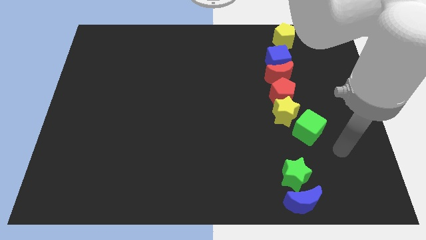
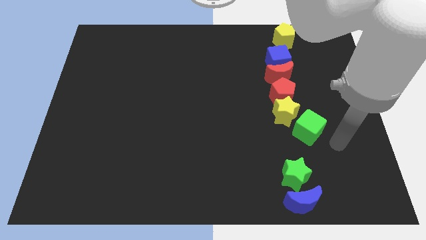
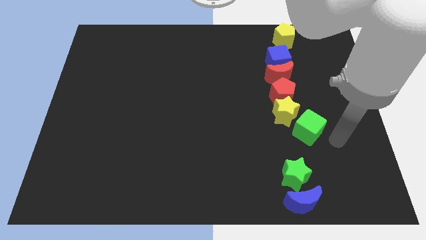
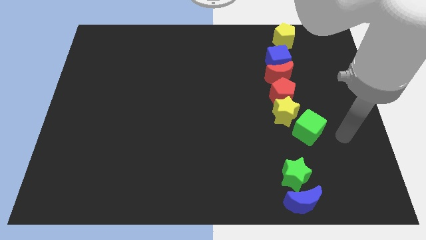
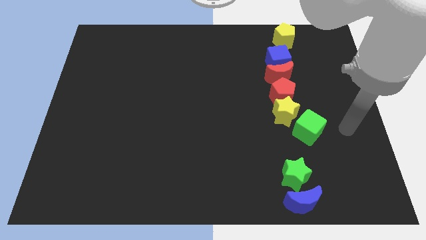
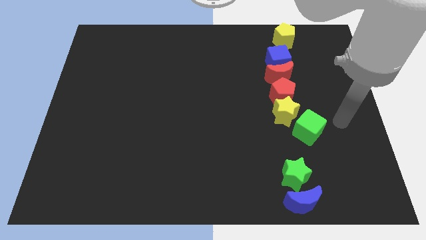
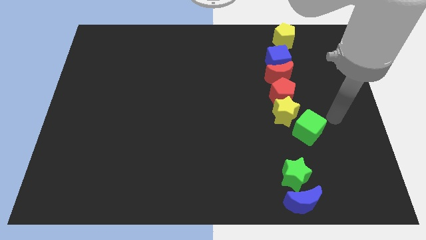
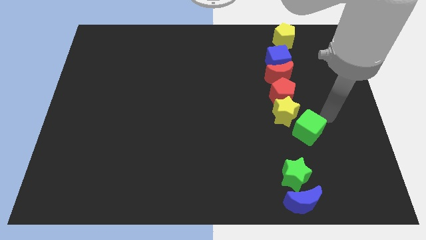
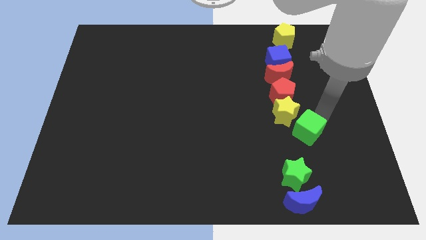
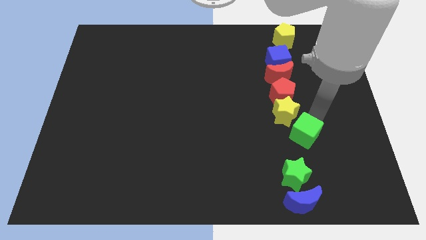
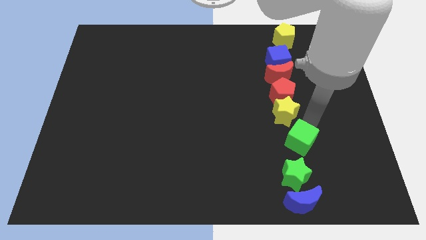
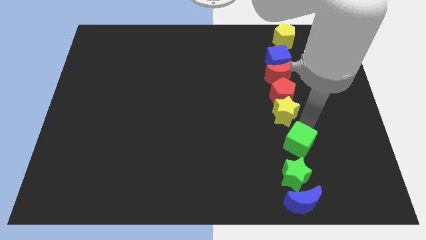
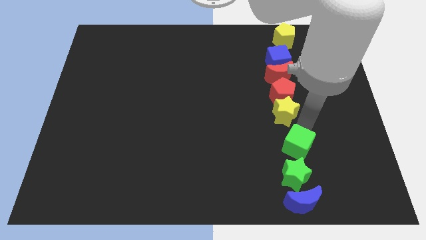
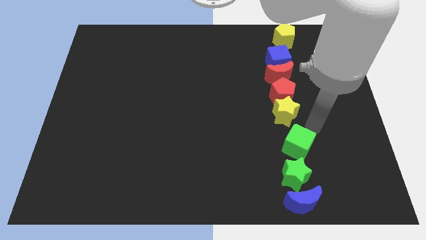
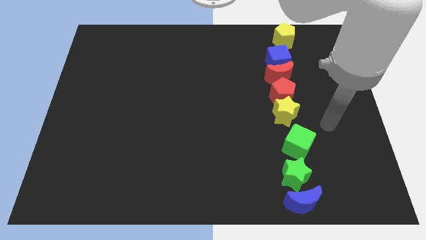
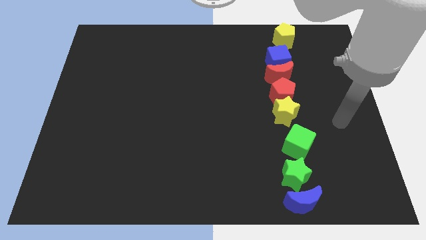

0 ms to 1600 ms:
push the green cube above the green star

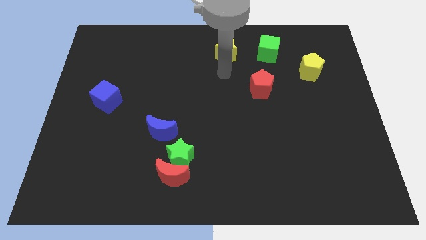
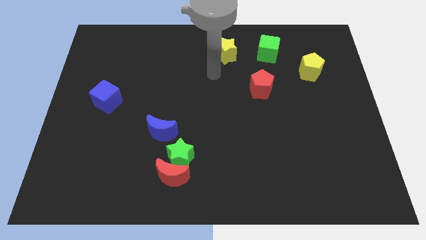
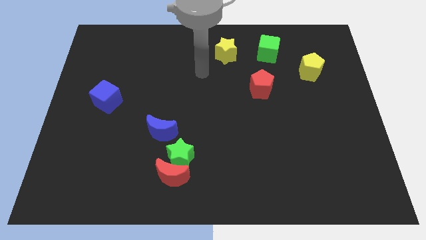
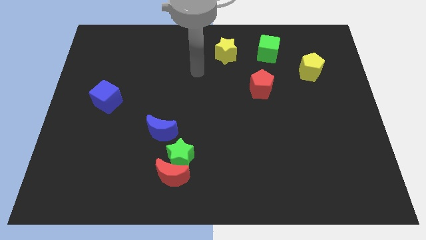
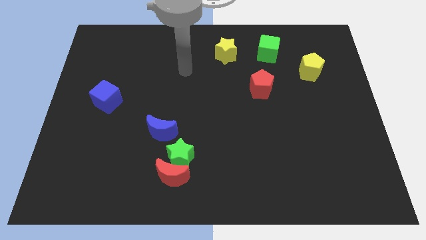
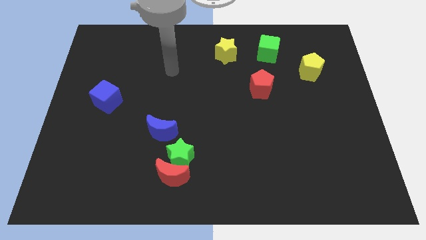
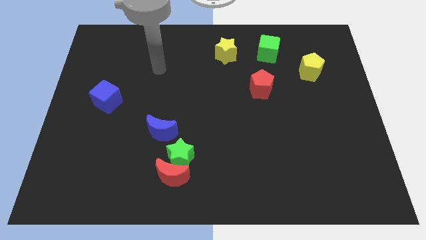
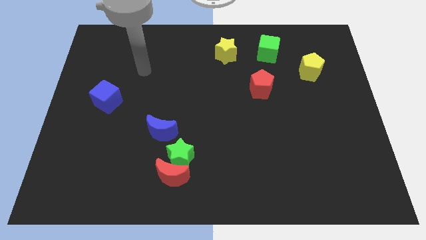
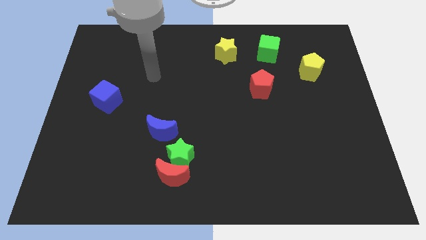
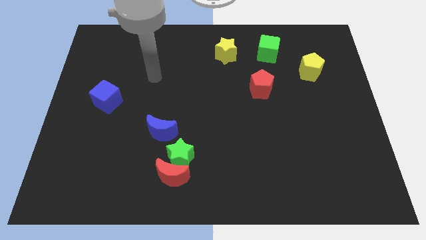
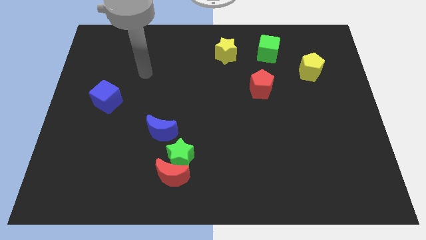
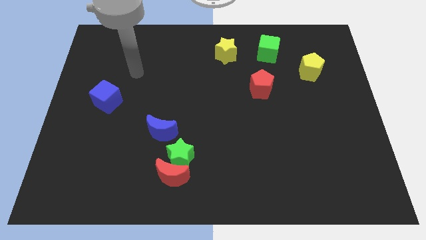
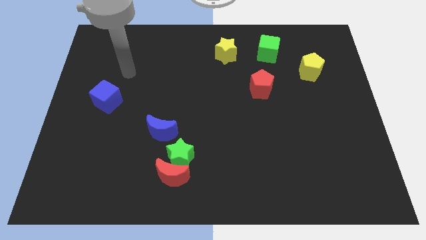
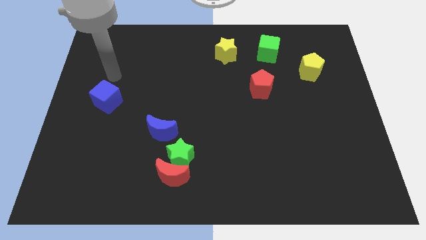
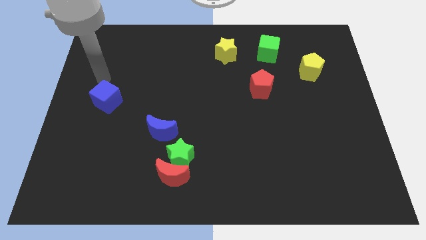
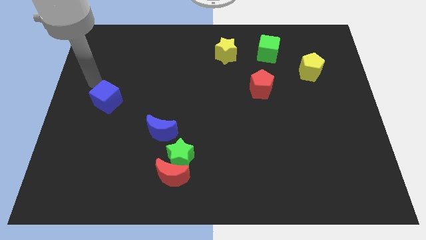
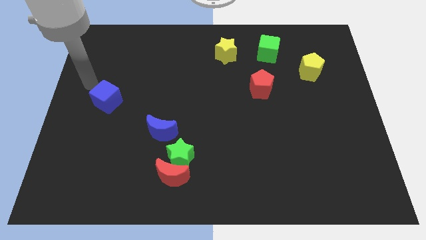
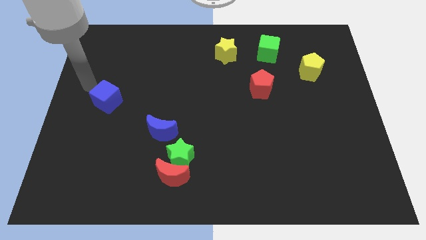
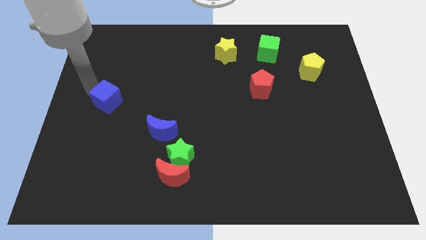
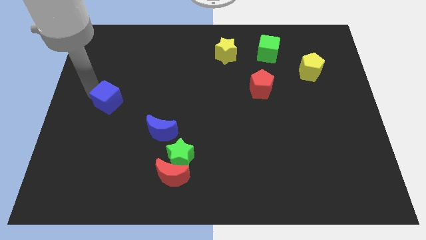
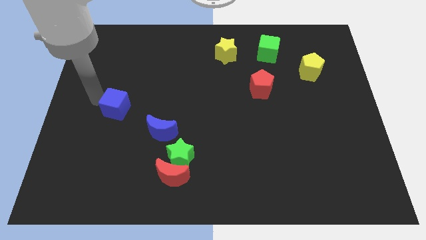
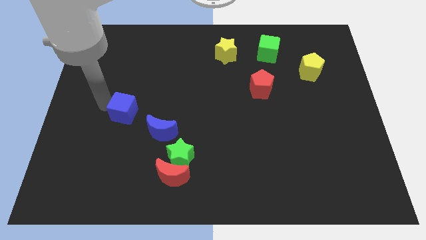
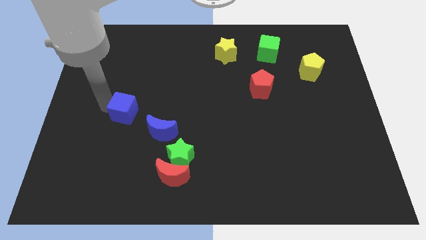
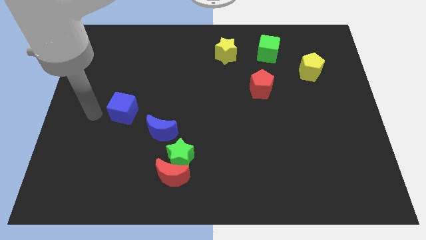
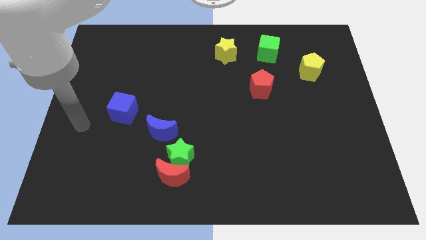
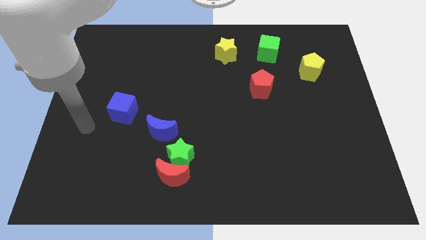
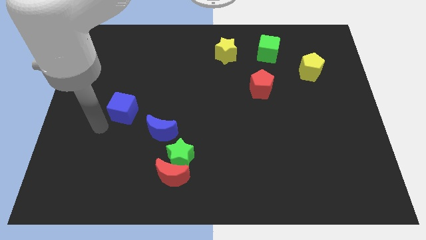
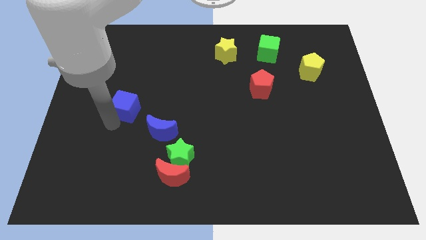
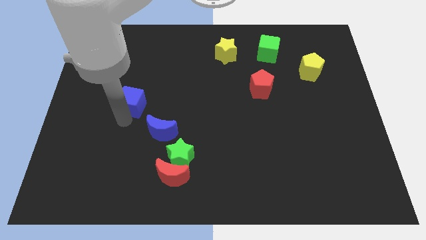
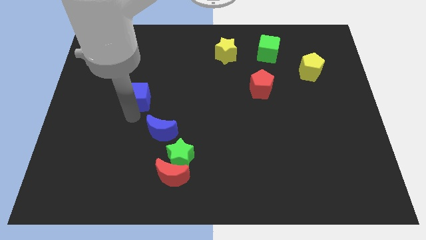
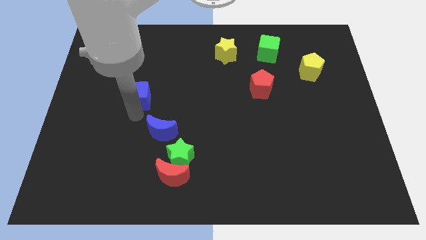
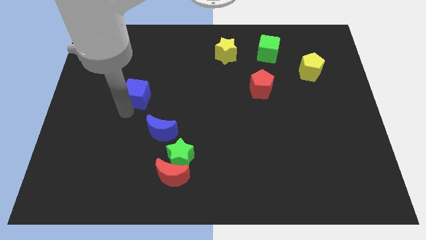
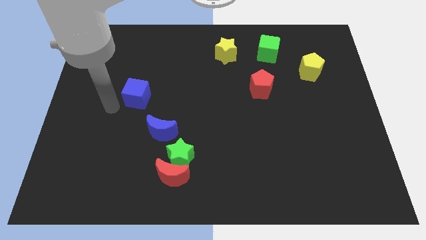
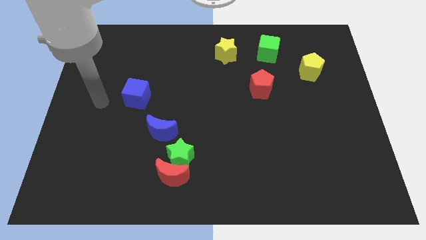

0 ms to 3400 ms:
push the blue cube to the top left of the blue rescent

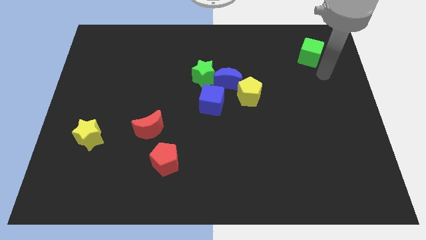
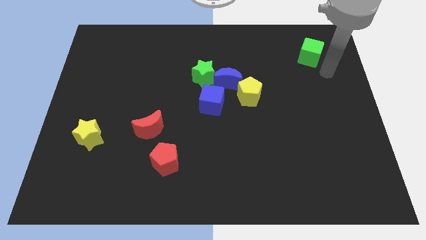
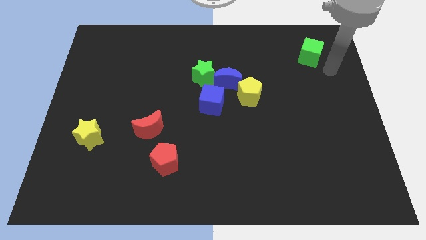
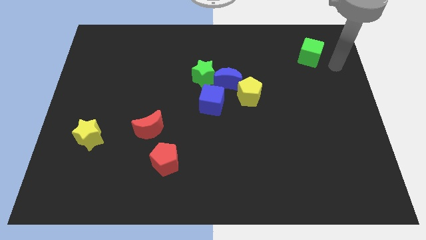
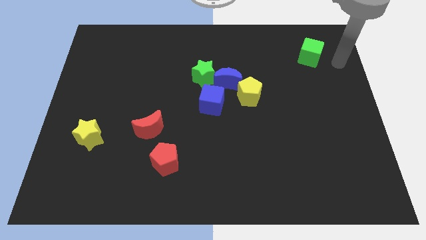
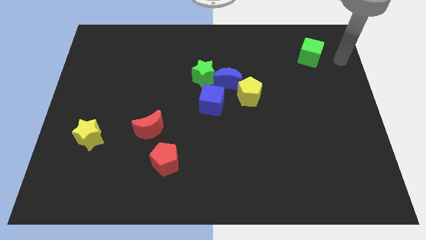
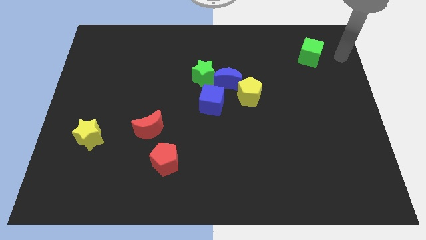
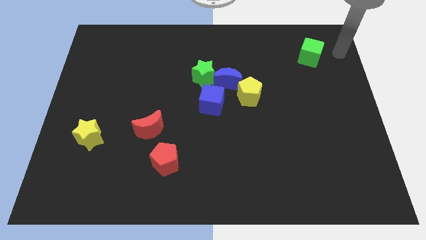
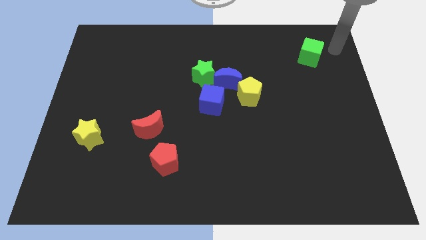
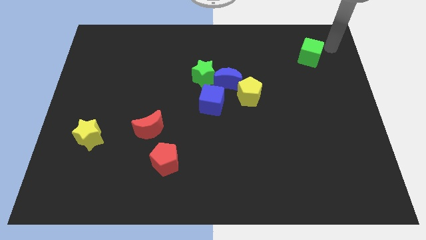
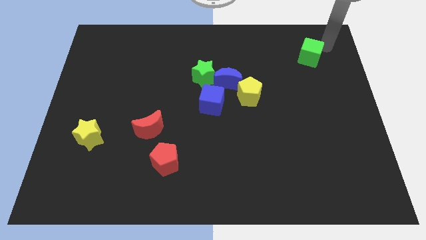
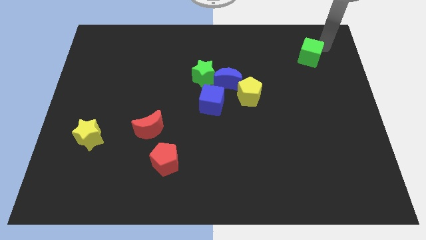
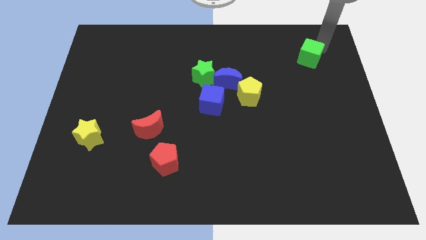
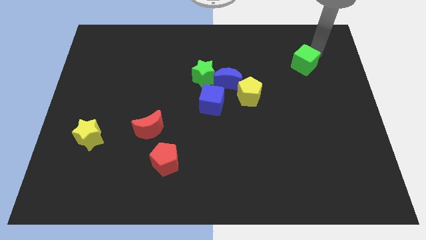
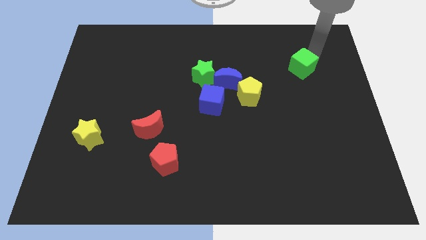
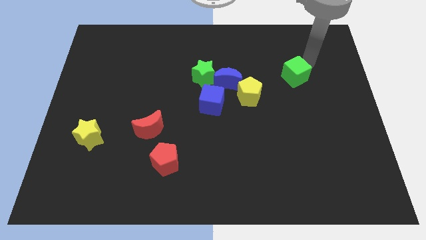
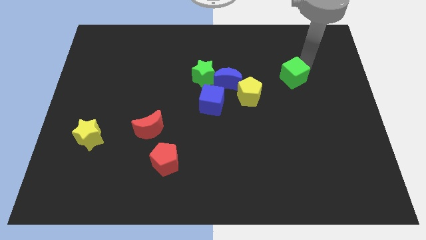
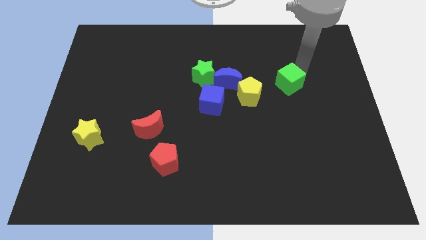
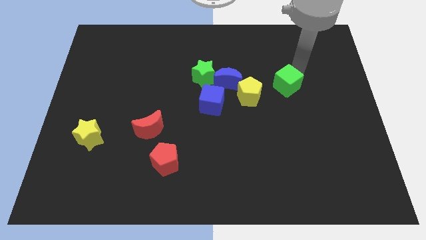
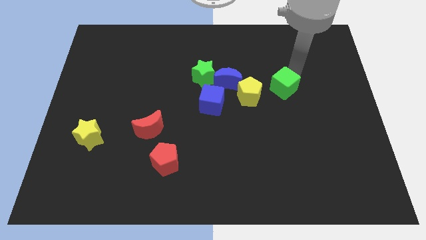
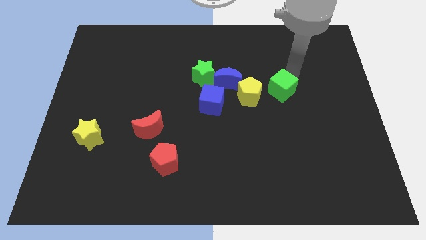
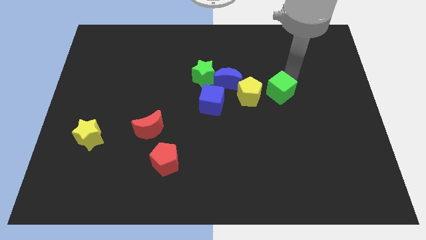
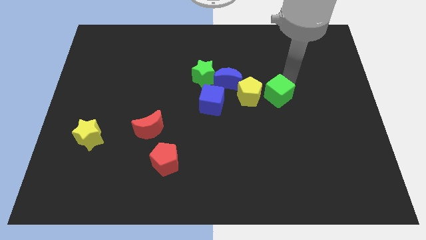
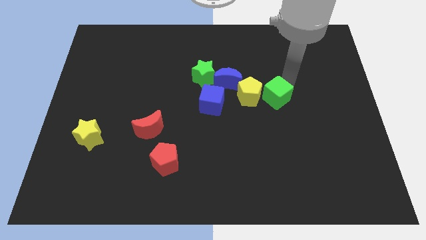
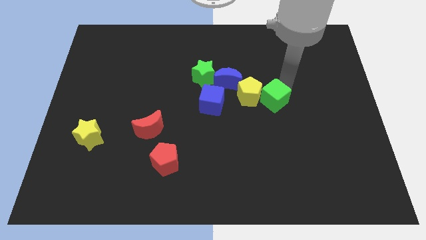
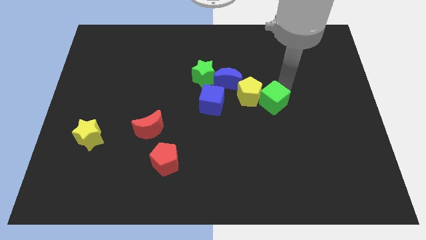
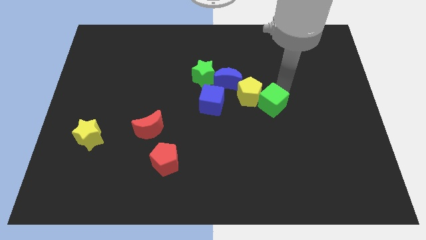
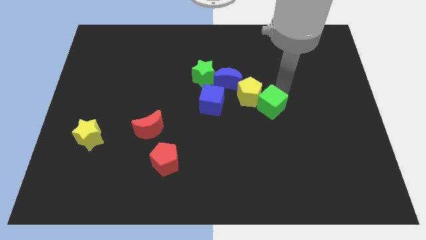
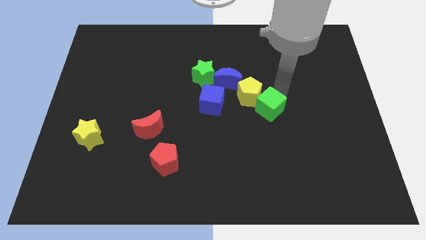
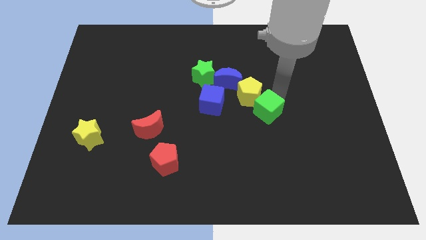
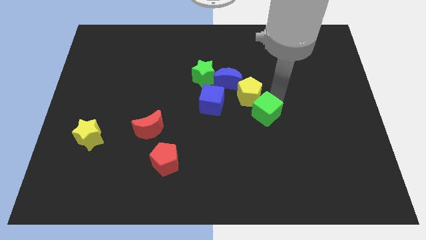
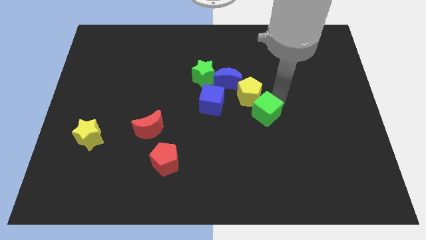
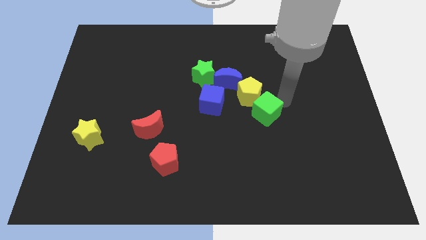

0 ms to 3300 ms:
push the green cube into yellow pentagon

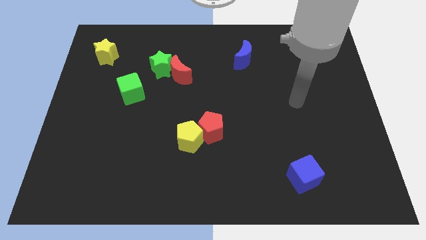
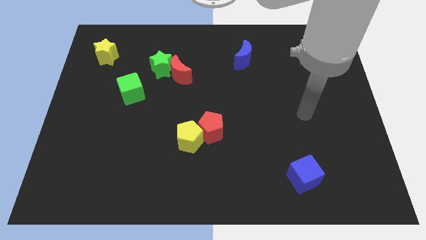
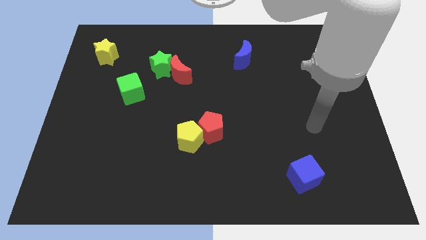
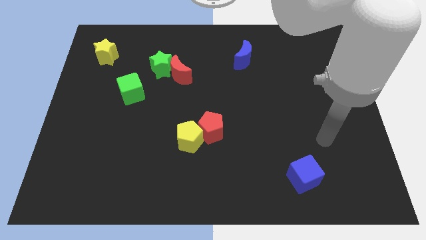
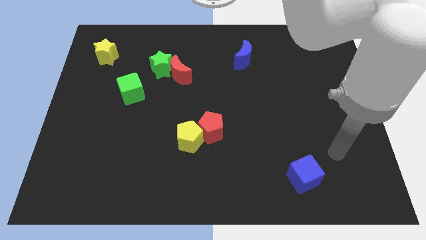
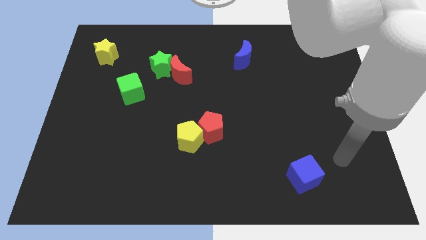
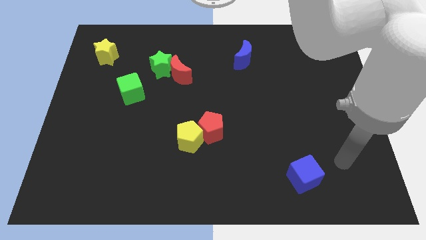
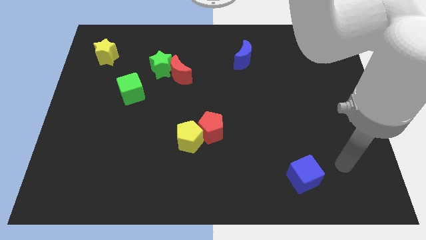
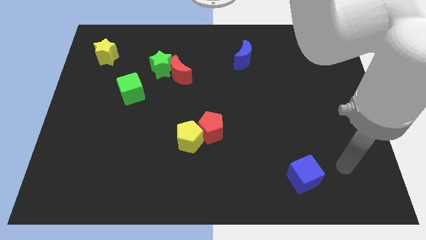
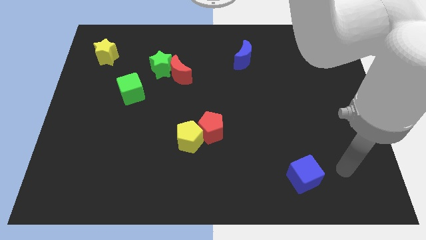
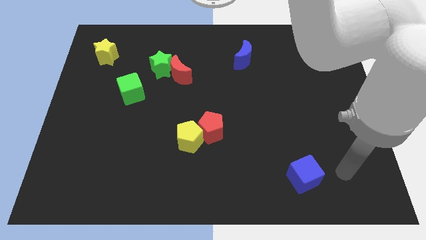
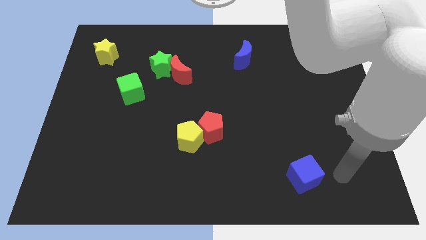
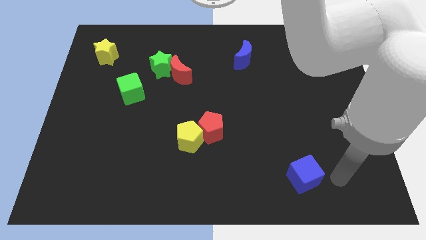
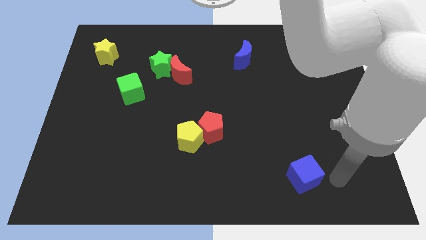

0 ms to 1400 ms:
move the arm to the blue cube
